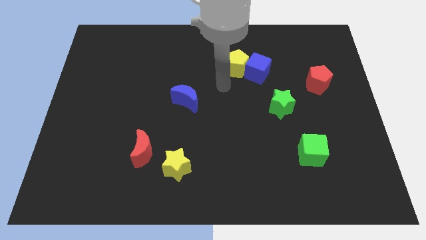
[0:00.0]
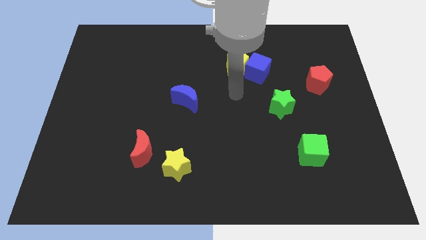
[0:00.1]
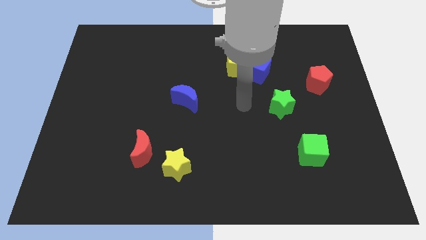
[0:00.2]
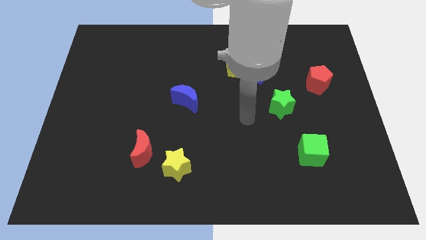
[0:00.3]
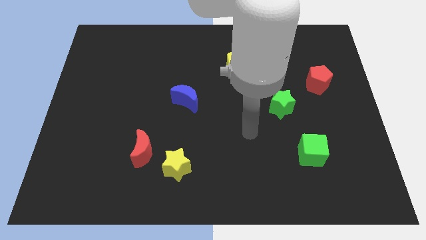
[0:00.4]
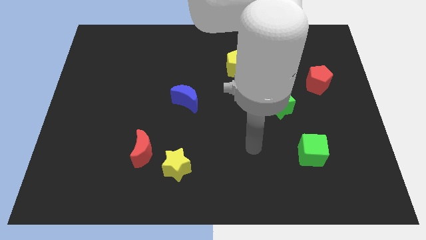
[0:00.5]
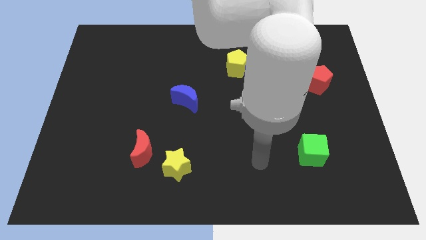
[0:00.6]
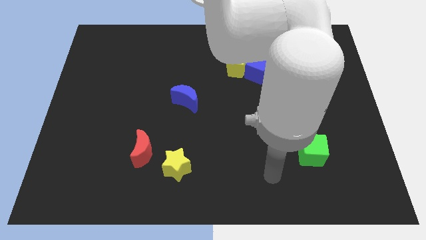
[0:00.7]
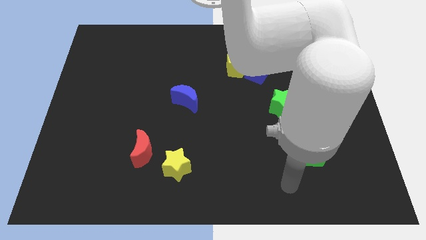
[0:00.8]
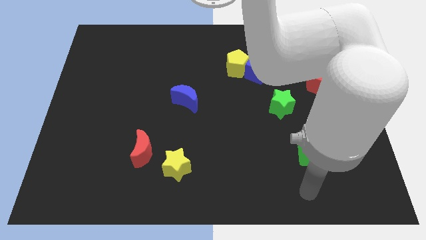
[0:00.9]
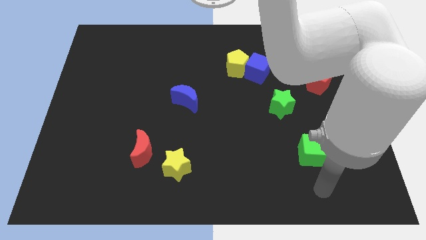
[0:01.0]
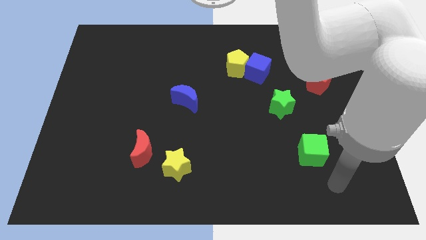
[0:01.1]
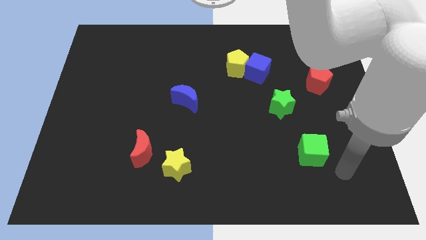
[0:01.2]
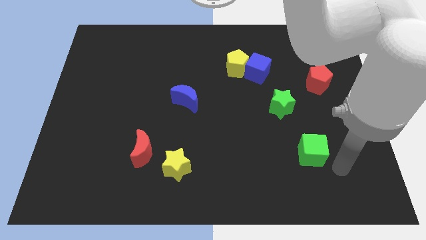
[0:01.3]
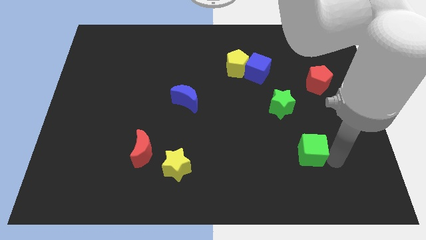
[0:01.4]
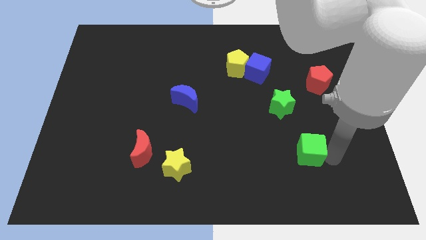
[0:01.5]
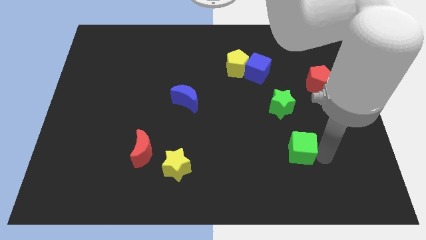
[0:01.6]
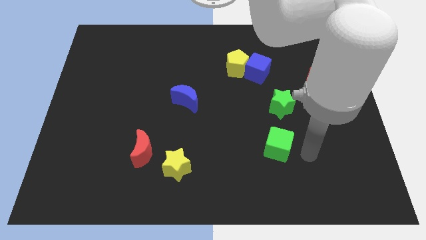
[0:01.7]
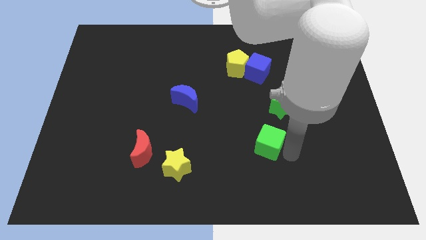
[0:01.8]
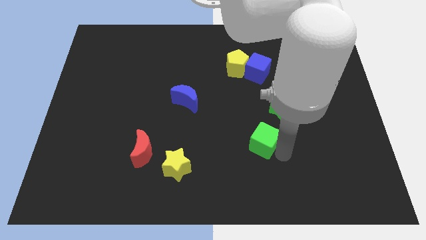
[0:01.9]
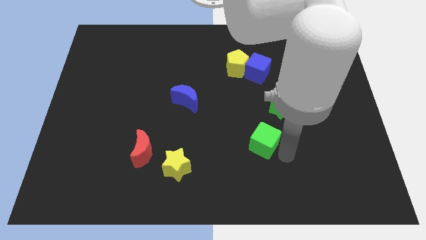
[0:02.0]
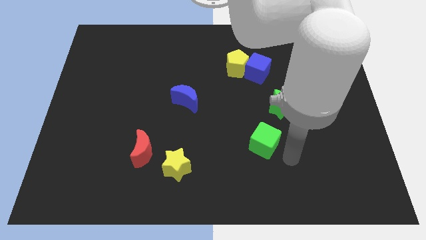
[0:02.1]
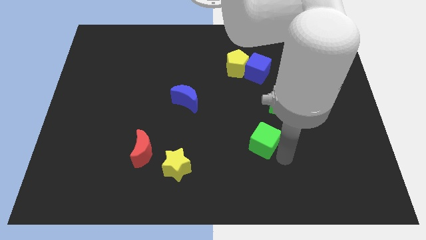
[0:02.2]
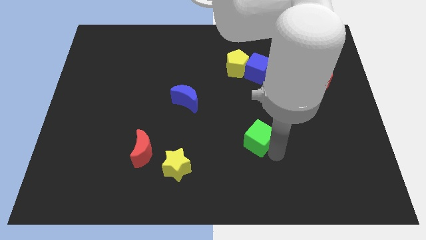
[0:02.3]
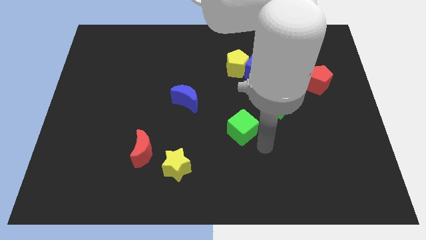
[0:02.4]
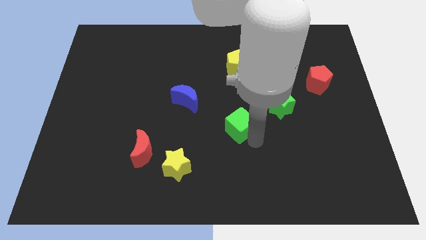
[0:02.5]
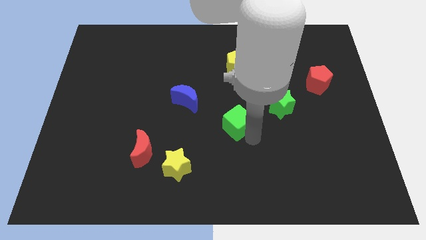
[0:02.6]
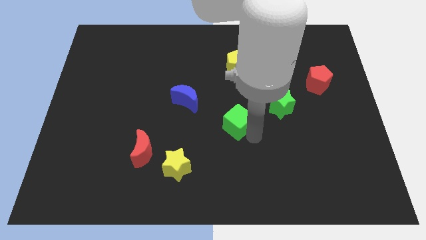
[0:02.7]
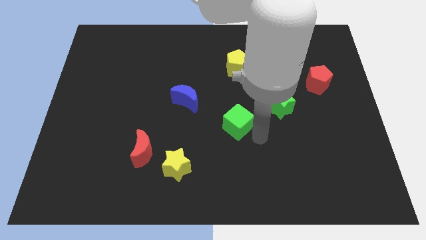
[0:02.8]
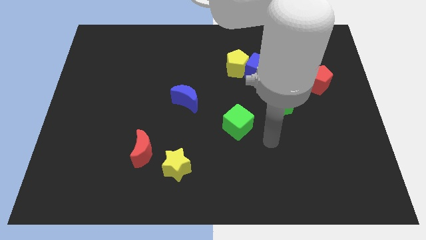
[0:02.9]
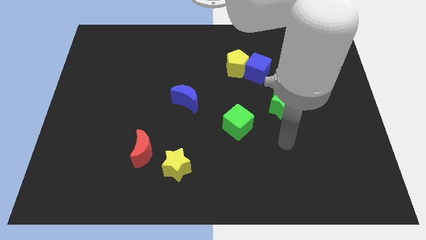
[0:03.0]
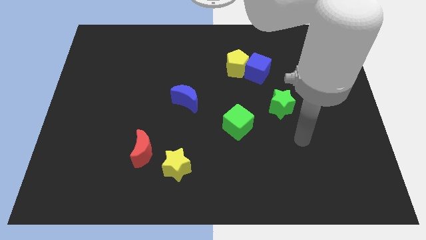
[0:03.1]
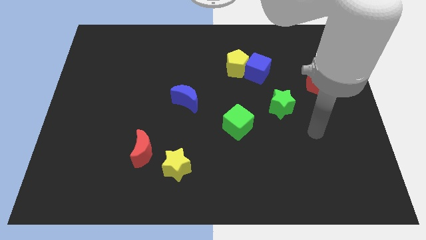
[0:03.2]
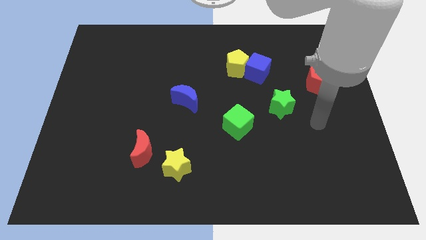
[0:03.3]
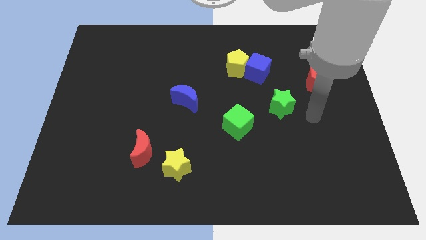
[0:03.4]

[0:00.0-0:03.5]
move the green cube to the centre of the board

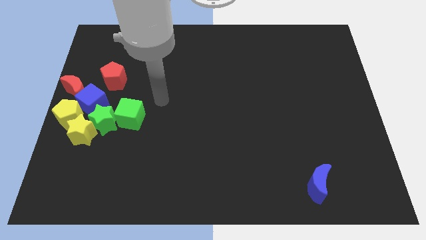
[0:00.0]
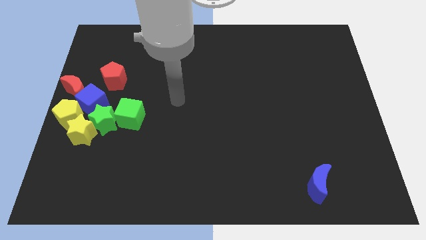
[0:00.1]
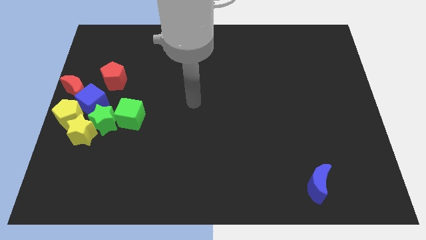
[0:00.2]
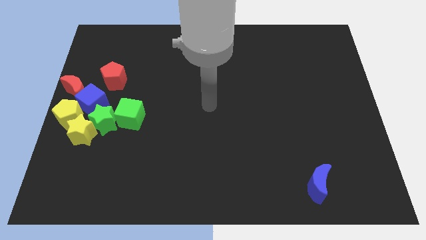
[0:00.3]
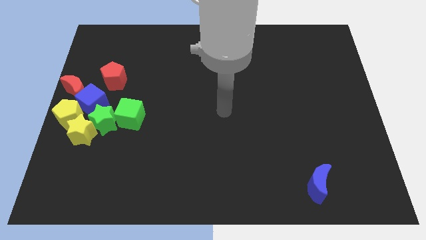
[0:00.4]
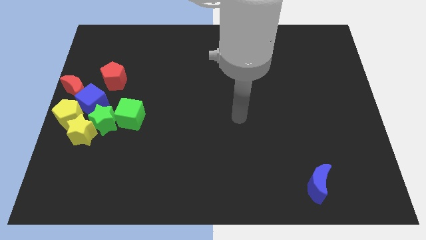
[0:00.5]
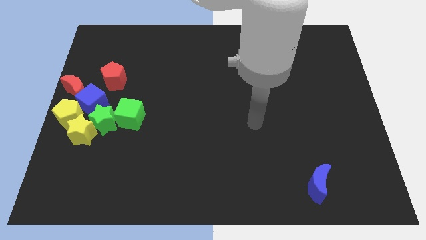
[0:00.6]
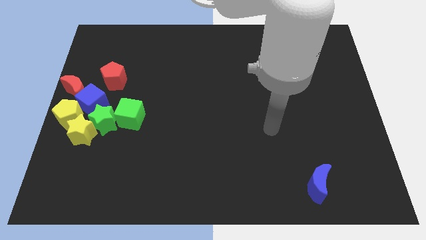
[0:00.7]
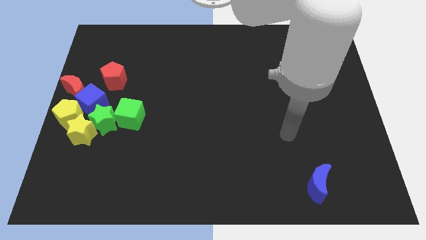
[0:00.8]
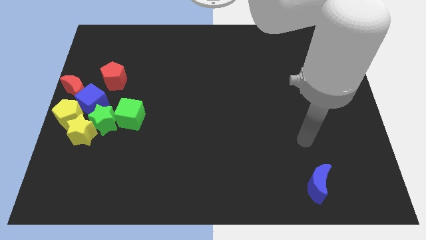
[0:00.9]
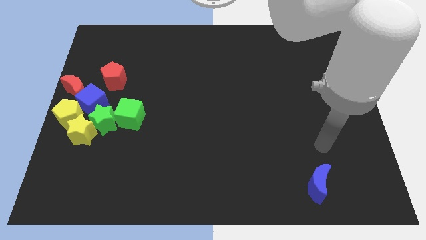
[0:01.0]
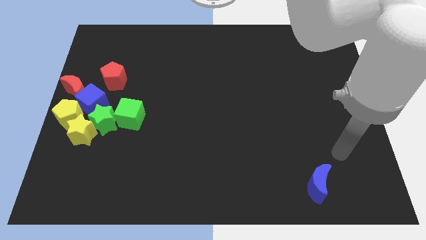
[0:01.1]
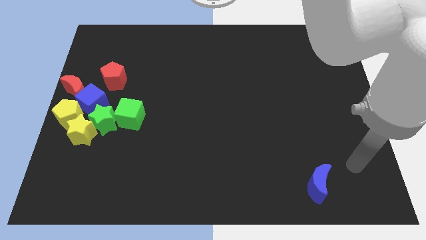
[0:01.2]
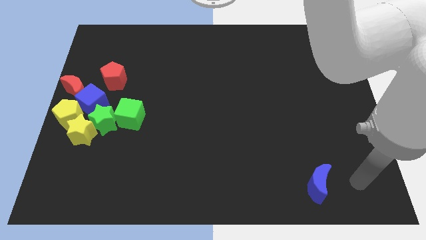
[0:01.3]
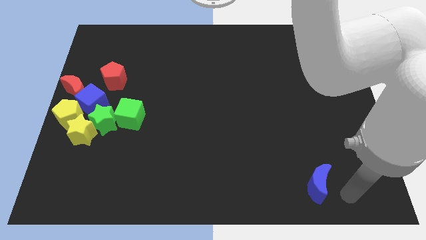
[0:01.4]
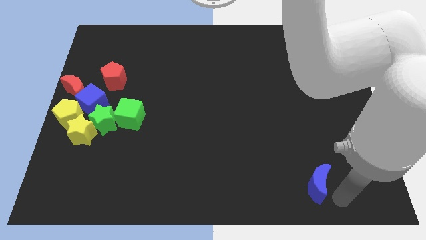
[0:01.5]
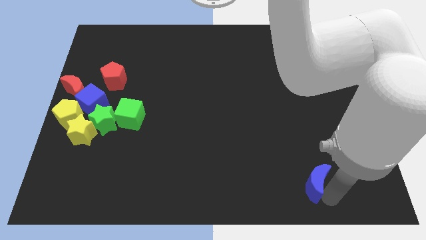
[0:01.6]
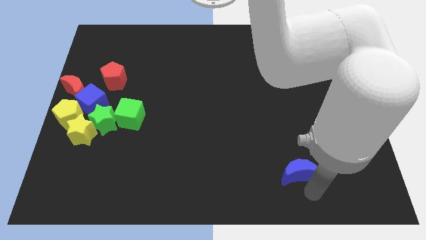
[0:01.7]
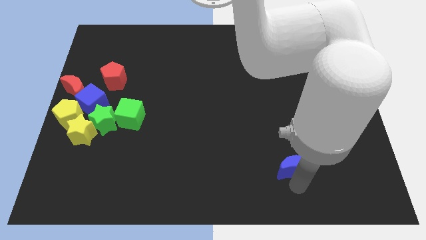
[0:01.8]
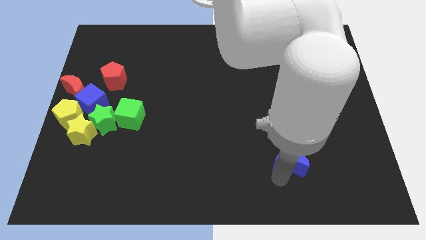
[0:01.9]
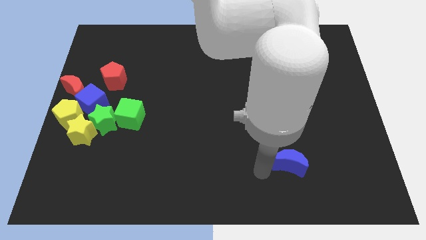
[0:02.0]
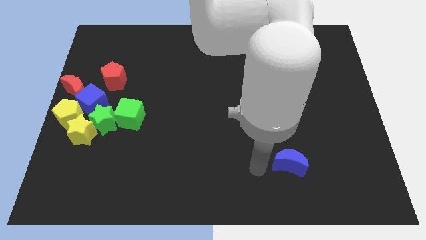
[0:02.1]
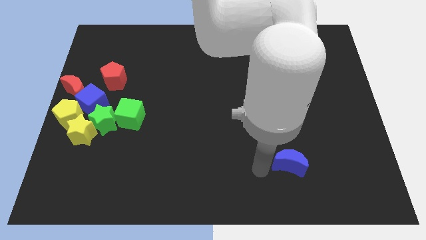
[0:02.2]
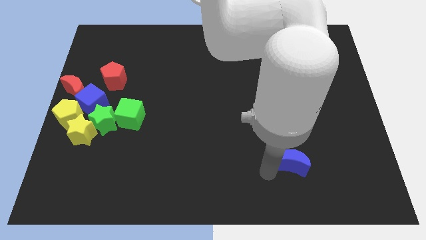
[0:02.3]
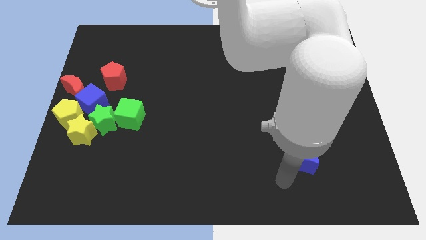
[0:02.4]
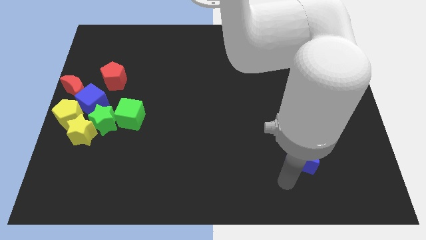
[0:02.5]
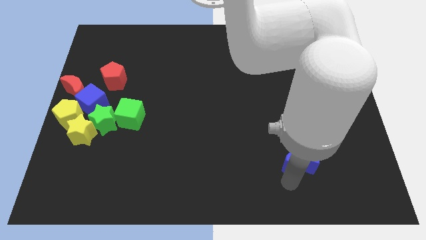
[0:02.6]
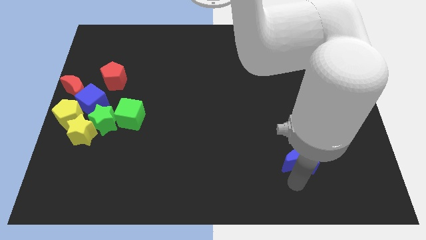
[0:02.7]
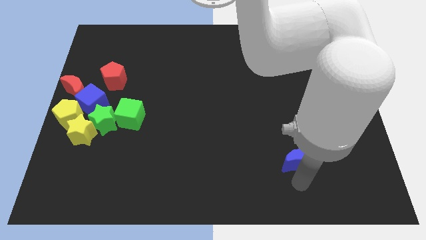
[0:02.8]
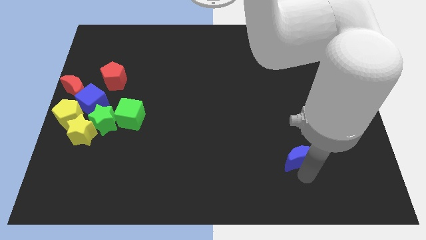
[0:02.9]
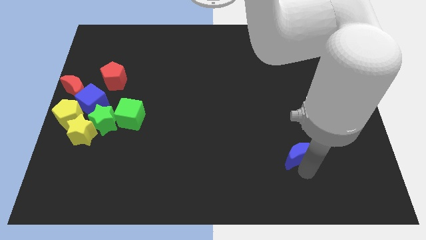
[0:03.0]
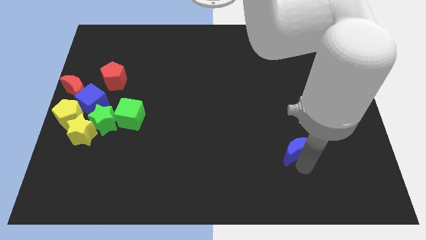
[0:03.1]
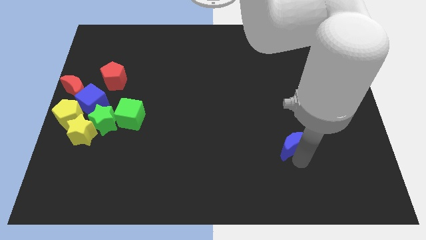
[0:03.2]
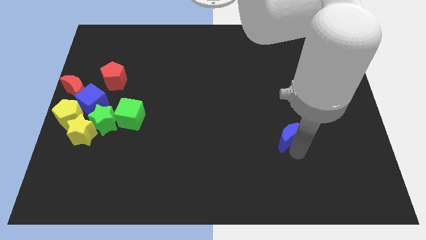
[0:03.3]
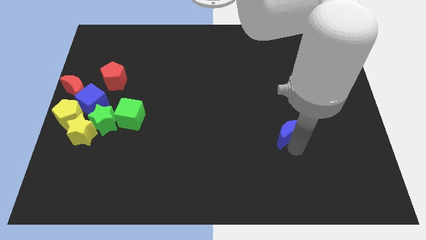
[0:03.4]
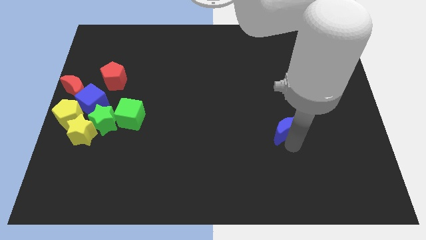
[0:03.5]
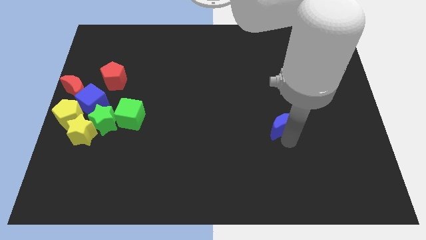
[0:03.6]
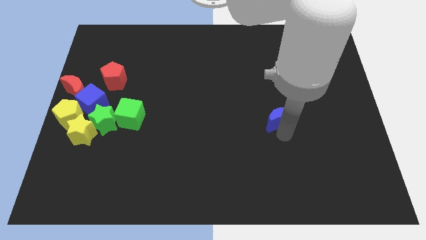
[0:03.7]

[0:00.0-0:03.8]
push the blue crescent towards top side of the table

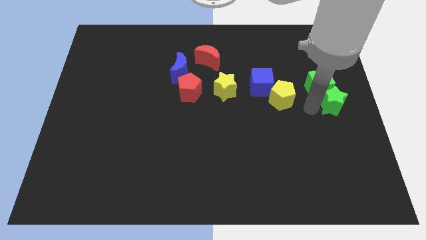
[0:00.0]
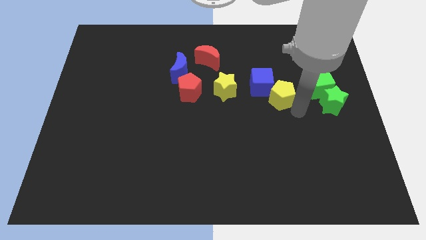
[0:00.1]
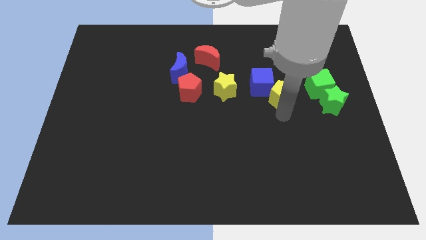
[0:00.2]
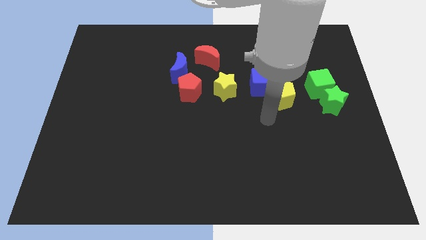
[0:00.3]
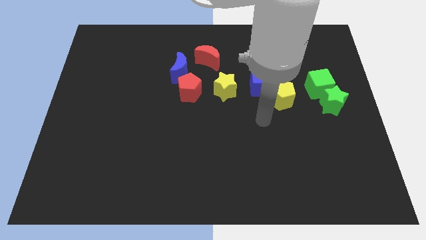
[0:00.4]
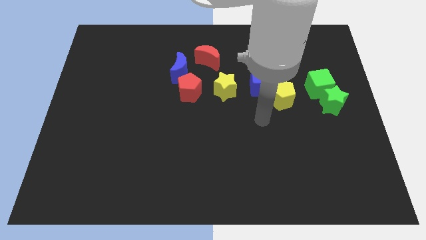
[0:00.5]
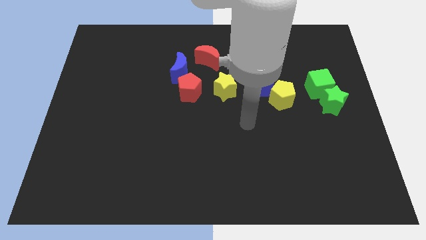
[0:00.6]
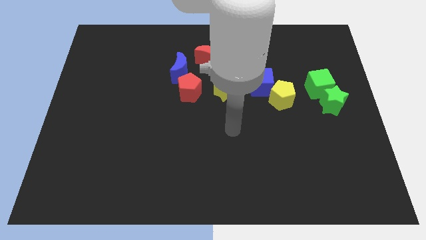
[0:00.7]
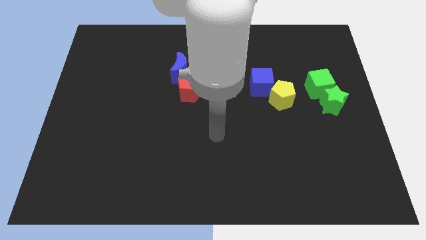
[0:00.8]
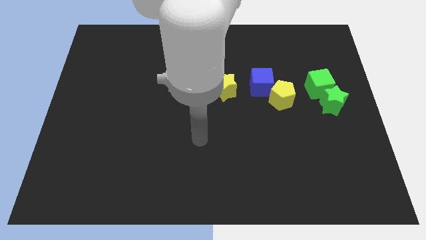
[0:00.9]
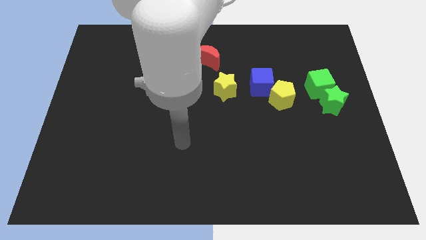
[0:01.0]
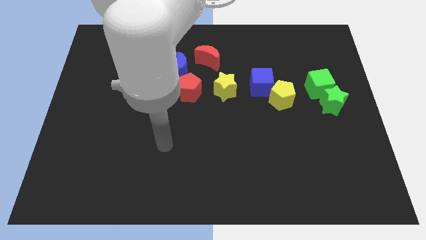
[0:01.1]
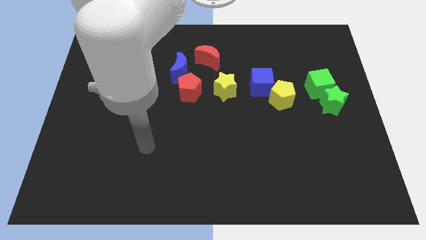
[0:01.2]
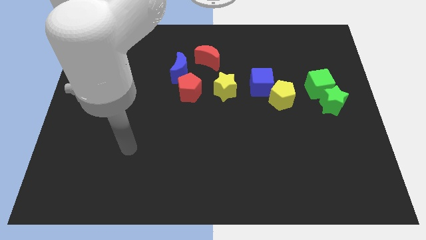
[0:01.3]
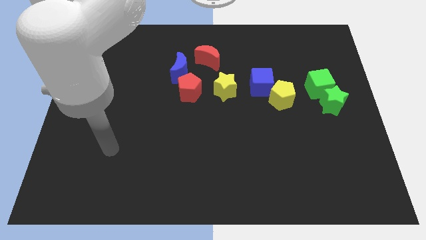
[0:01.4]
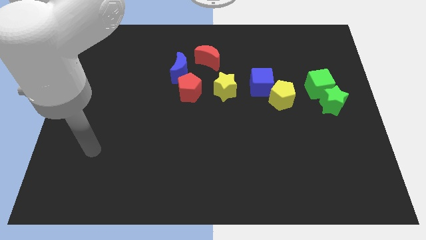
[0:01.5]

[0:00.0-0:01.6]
move the arm away from the green star
